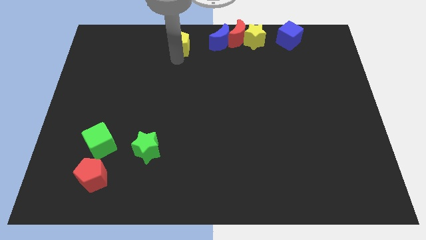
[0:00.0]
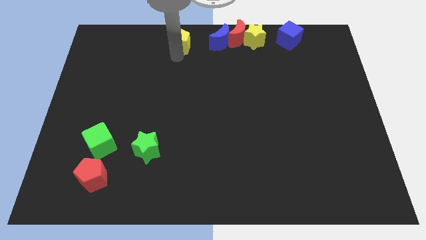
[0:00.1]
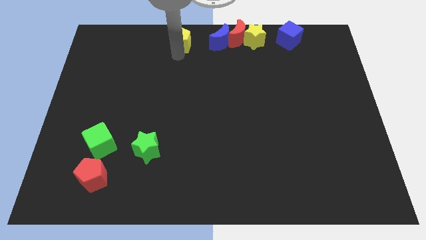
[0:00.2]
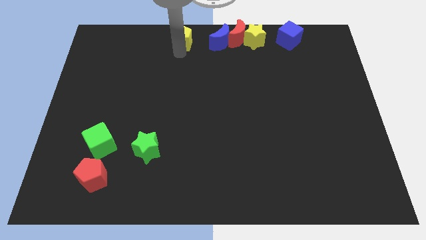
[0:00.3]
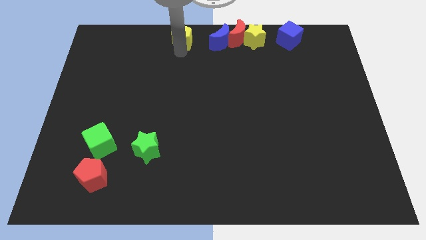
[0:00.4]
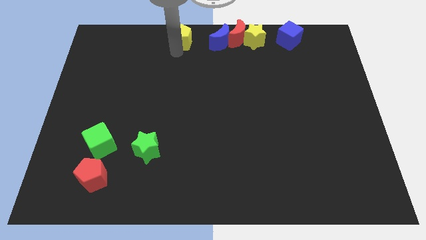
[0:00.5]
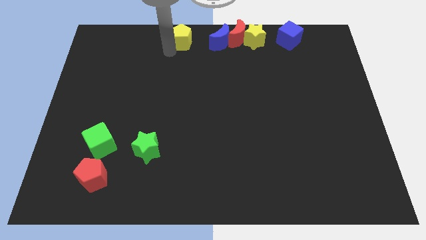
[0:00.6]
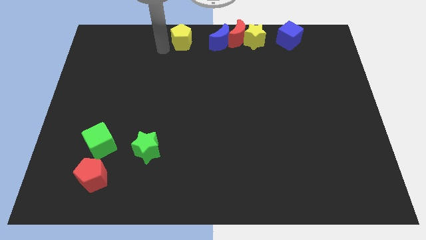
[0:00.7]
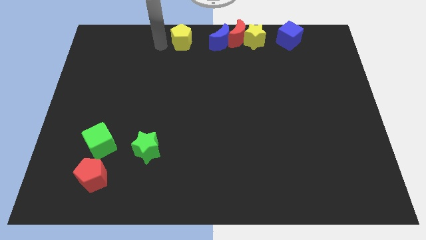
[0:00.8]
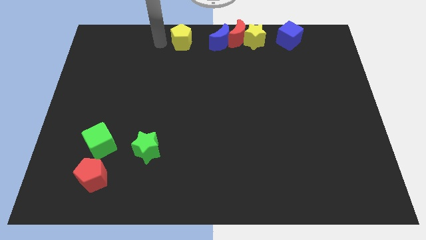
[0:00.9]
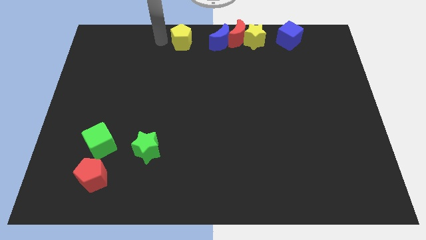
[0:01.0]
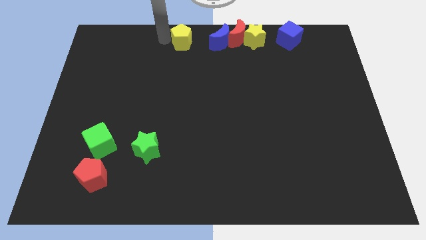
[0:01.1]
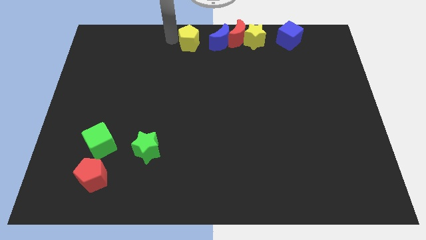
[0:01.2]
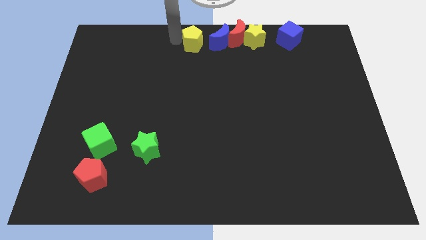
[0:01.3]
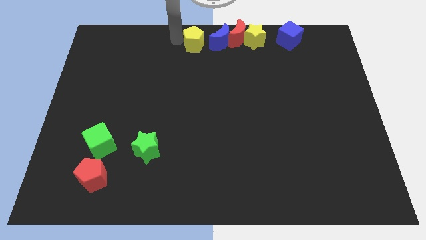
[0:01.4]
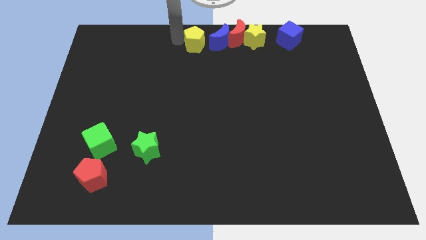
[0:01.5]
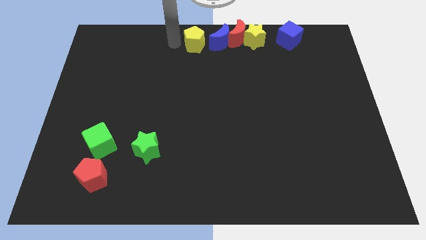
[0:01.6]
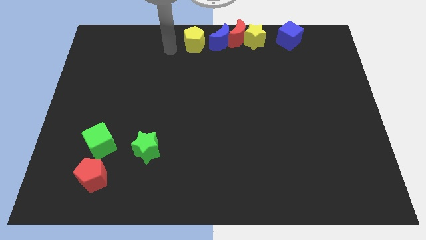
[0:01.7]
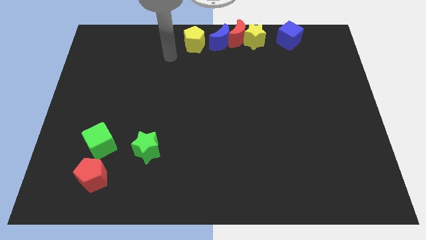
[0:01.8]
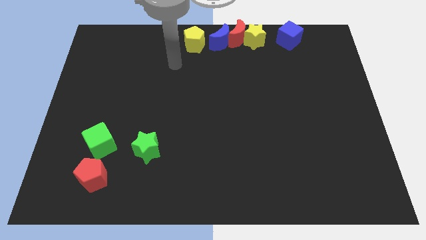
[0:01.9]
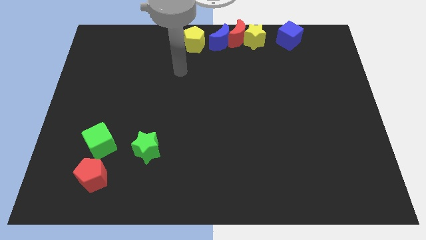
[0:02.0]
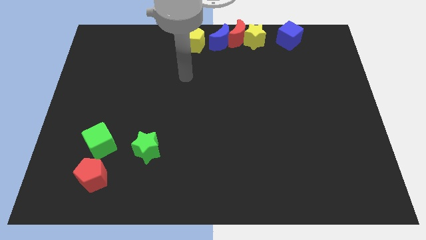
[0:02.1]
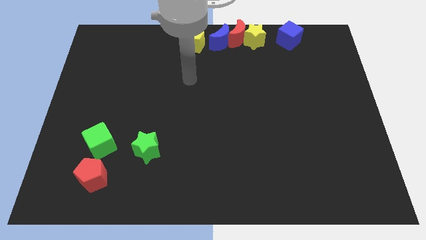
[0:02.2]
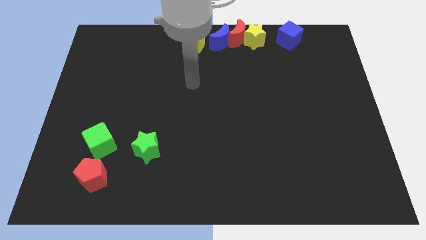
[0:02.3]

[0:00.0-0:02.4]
move the yellow pentagon to left side of blue moon

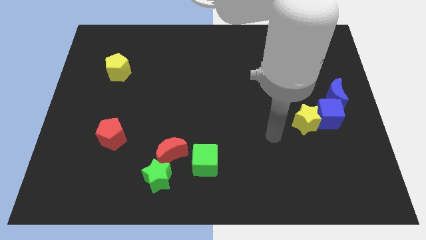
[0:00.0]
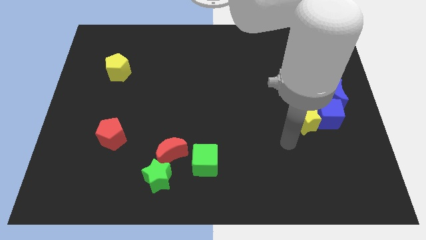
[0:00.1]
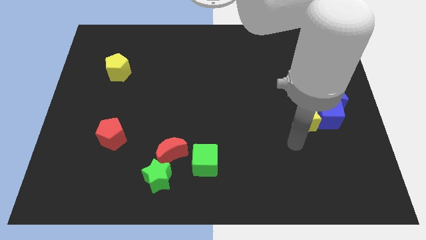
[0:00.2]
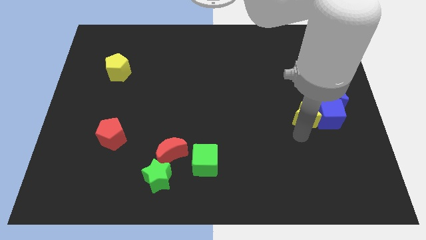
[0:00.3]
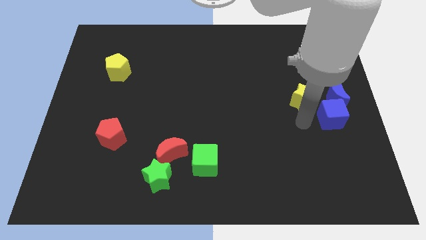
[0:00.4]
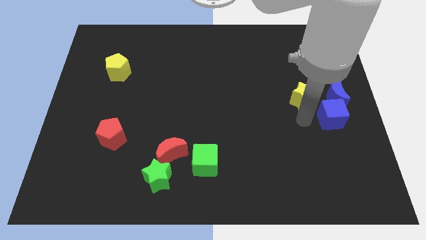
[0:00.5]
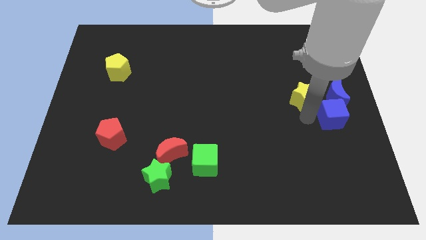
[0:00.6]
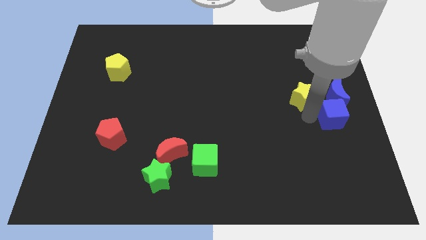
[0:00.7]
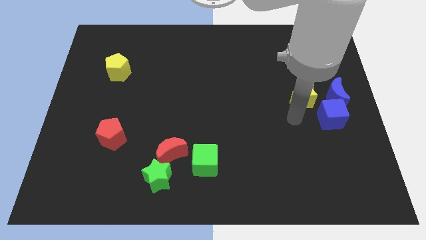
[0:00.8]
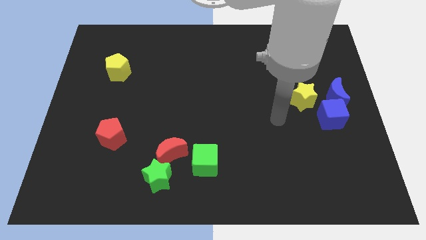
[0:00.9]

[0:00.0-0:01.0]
separate the yellow star from the blue cube

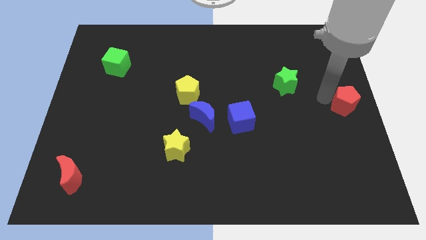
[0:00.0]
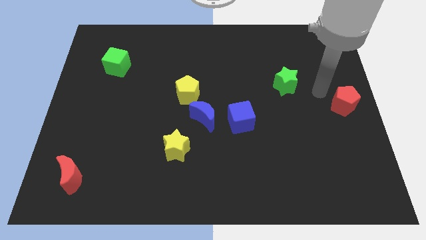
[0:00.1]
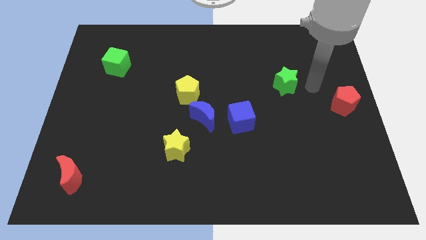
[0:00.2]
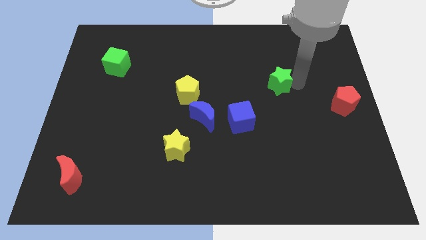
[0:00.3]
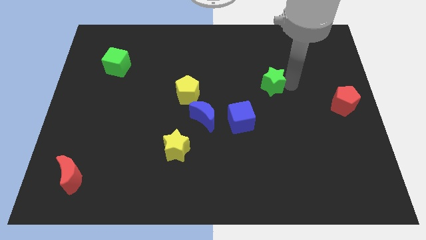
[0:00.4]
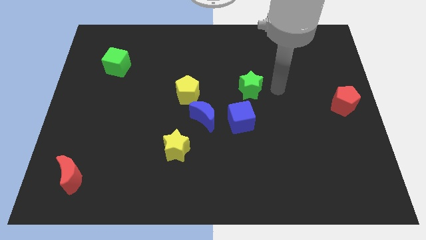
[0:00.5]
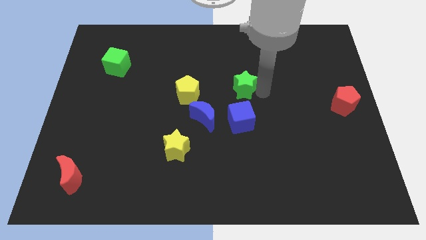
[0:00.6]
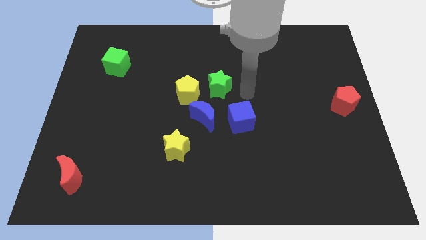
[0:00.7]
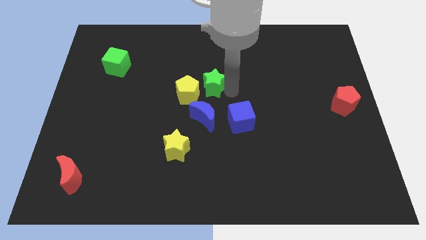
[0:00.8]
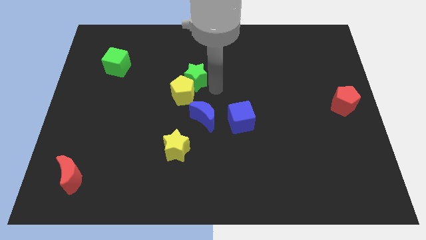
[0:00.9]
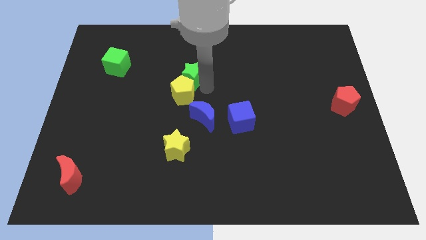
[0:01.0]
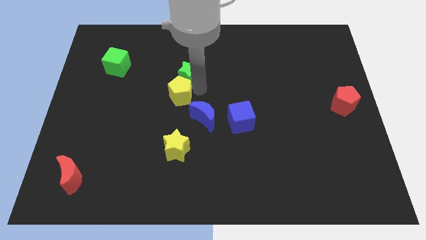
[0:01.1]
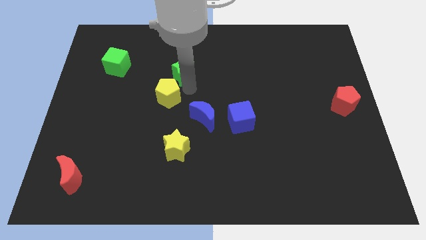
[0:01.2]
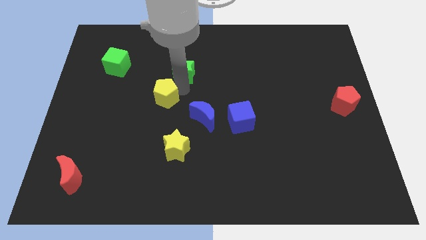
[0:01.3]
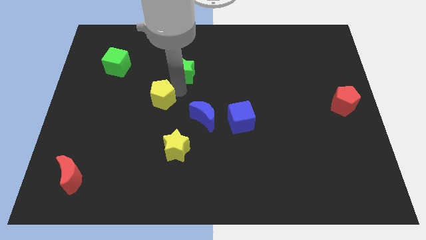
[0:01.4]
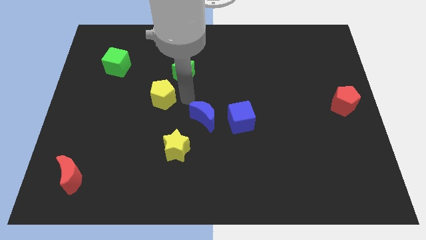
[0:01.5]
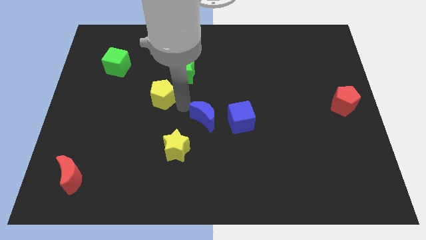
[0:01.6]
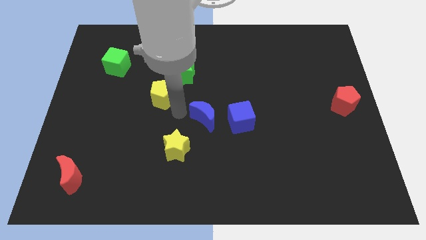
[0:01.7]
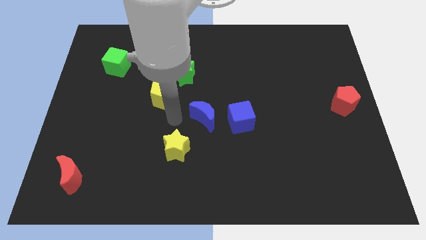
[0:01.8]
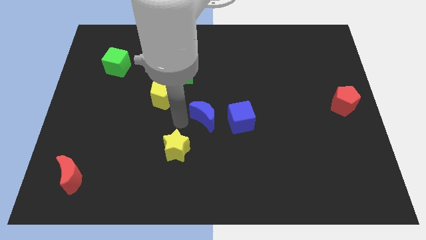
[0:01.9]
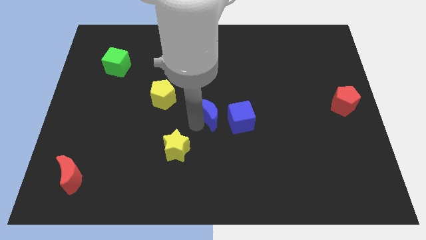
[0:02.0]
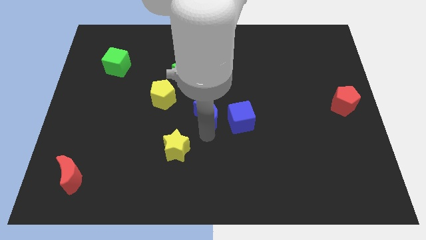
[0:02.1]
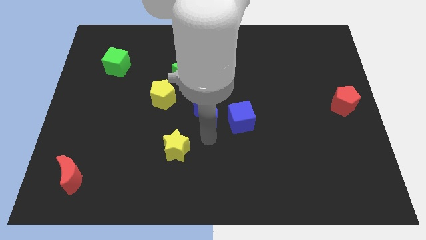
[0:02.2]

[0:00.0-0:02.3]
push the green star and yellow pentagon towards the left side of the board

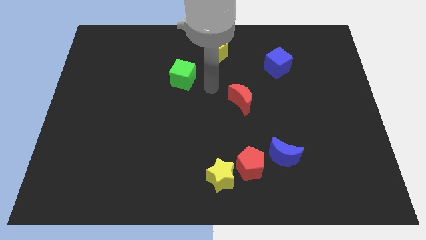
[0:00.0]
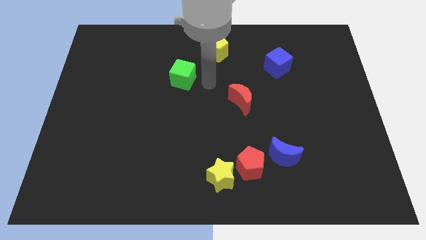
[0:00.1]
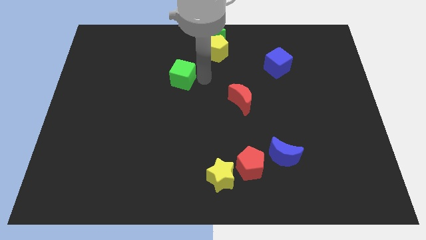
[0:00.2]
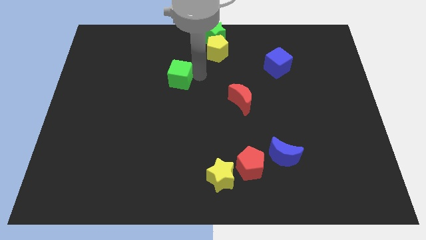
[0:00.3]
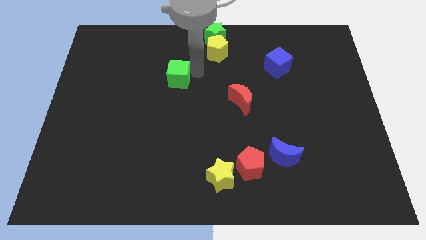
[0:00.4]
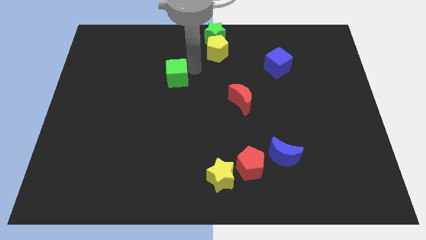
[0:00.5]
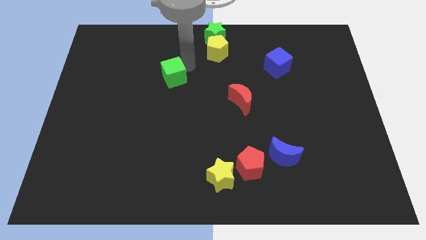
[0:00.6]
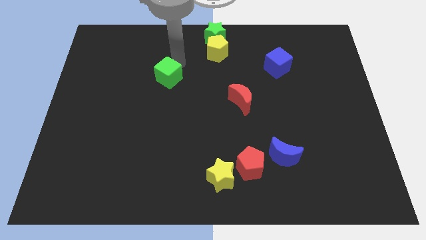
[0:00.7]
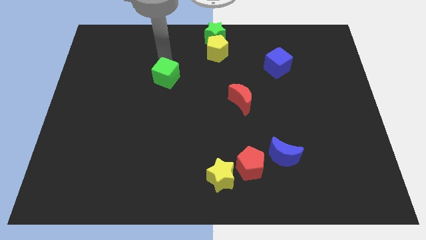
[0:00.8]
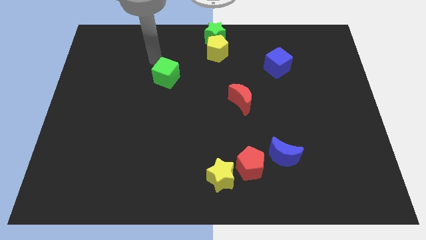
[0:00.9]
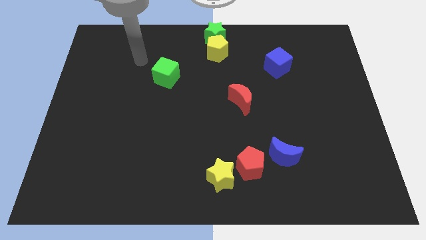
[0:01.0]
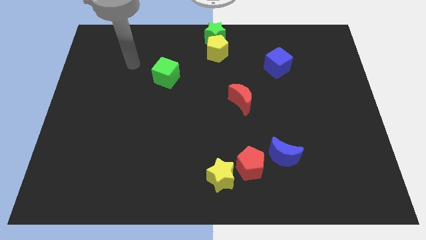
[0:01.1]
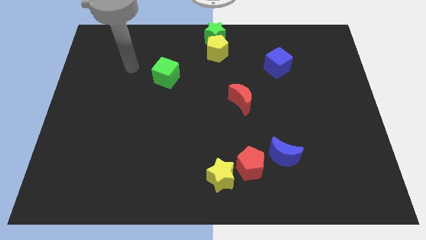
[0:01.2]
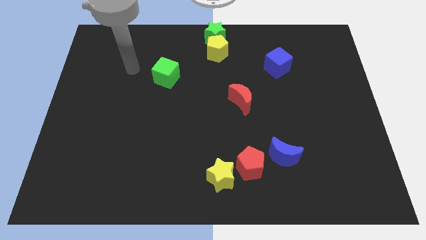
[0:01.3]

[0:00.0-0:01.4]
push the green cube slightly to the left

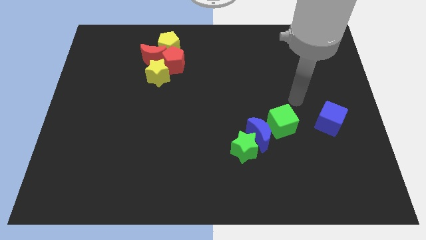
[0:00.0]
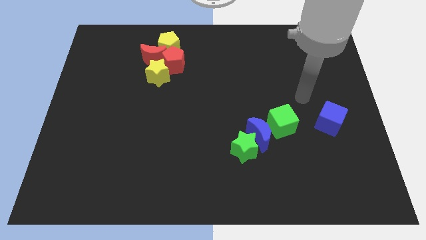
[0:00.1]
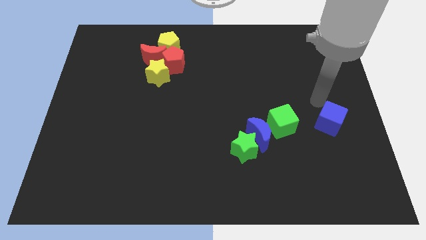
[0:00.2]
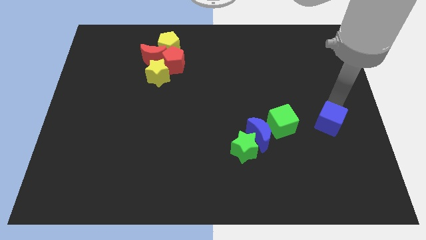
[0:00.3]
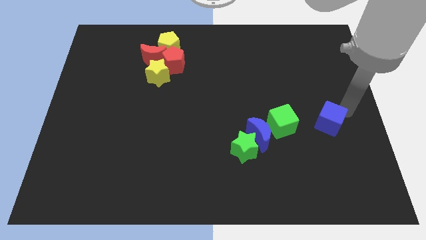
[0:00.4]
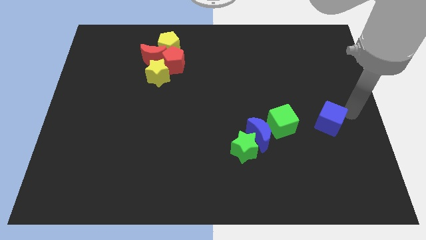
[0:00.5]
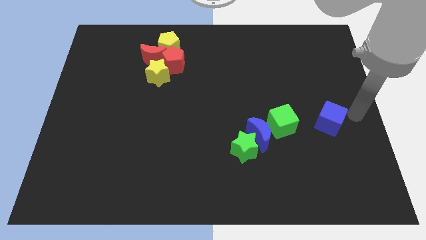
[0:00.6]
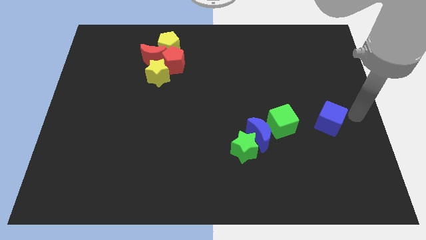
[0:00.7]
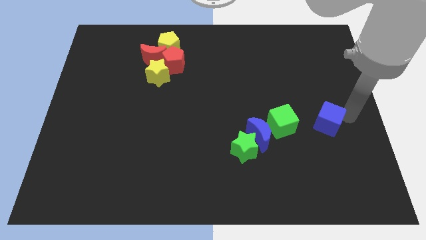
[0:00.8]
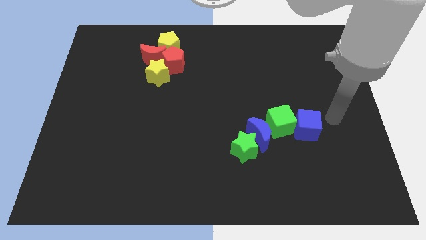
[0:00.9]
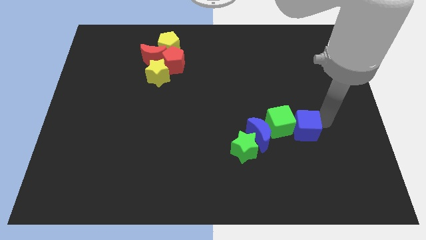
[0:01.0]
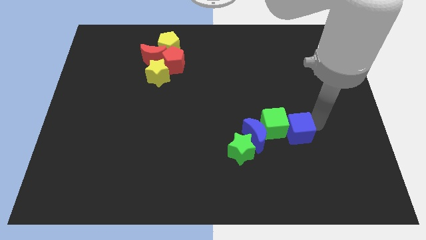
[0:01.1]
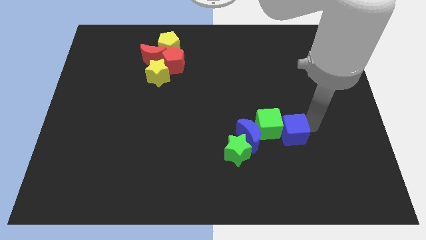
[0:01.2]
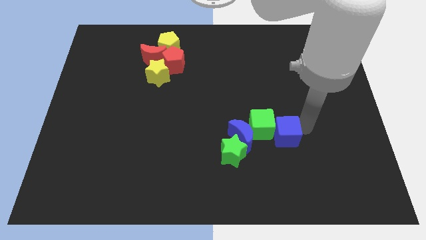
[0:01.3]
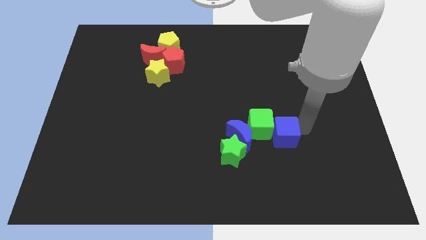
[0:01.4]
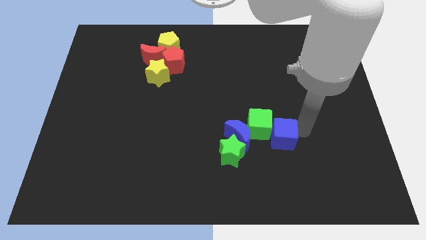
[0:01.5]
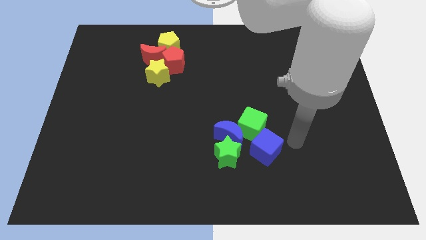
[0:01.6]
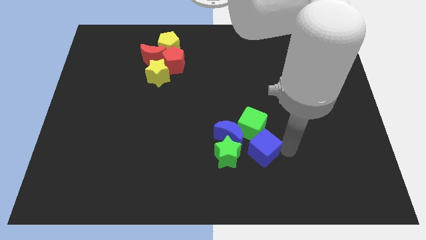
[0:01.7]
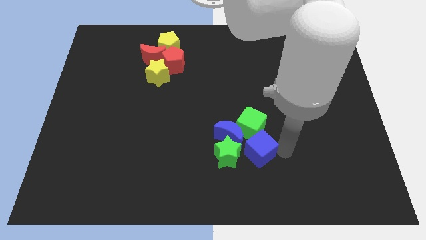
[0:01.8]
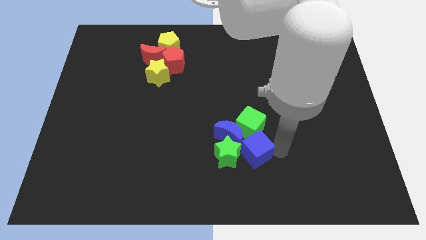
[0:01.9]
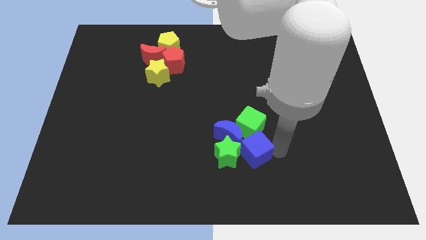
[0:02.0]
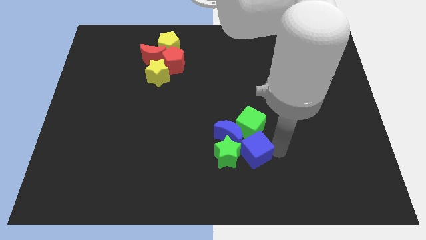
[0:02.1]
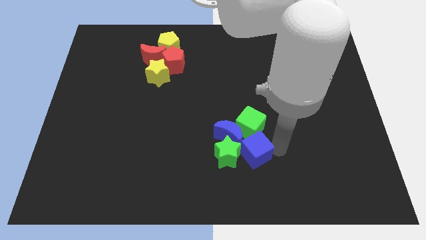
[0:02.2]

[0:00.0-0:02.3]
push the green and blue blocks towards the bottom side of the board
